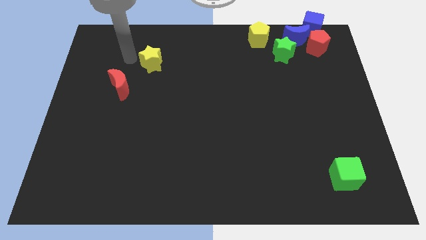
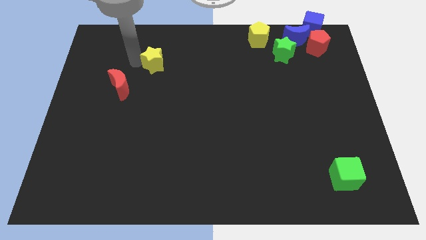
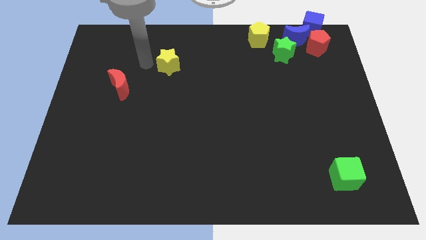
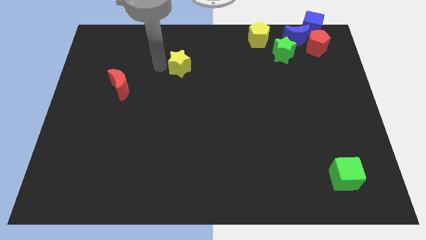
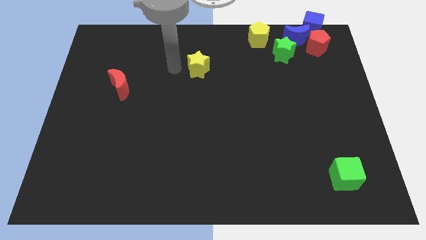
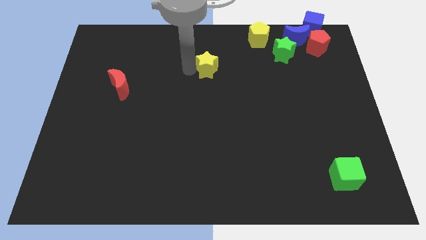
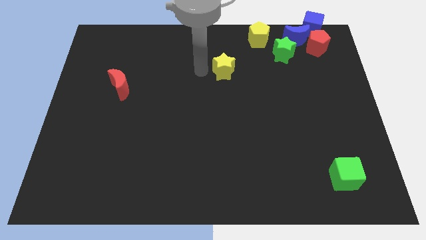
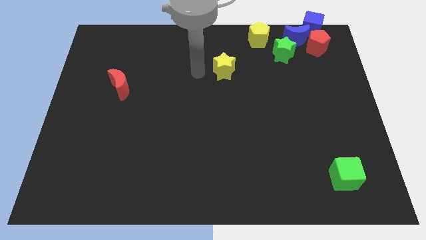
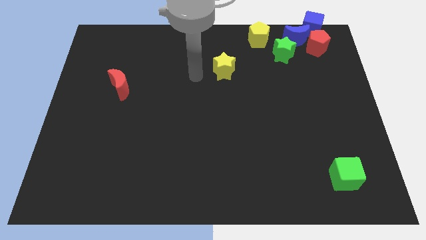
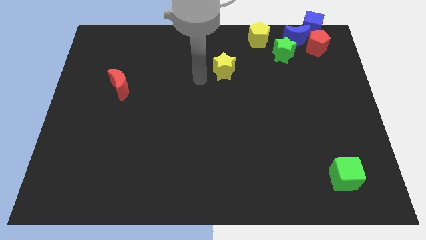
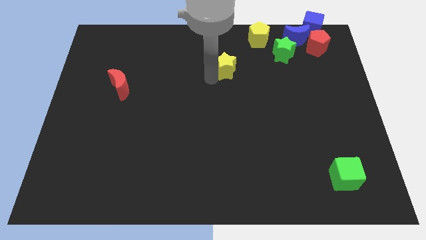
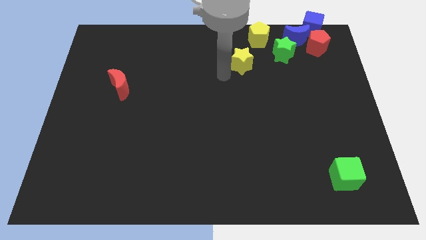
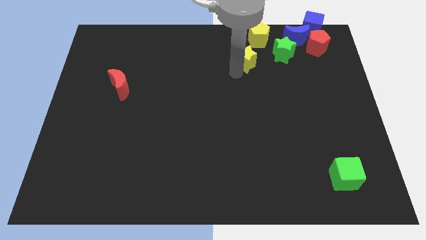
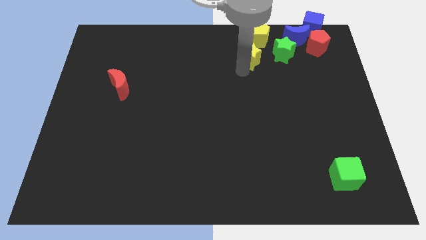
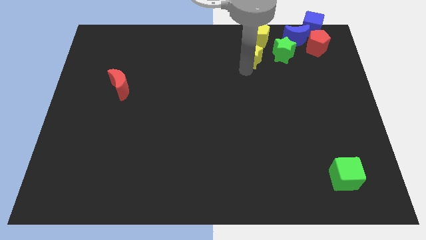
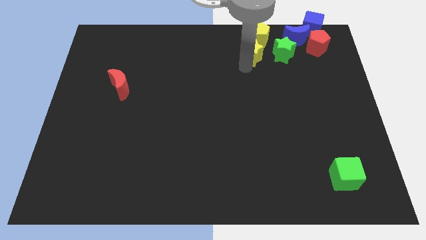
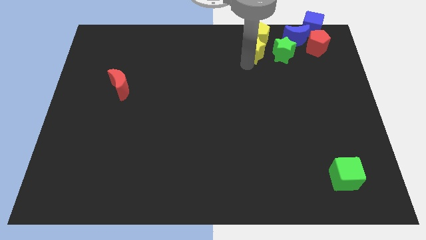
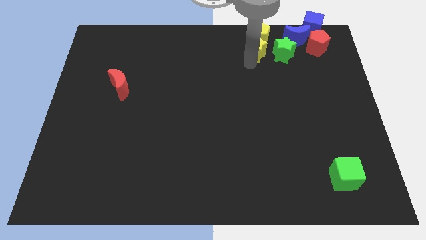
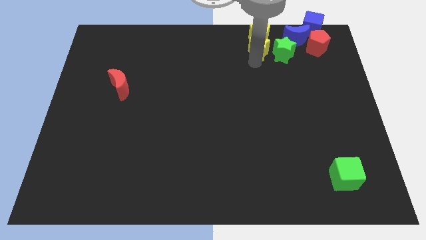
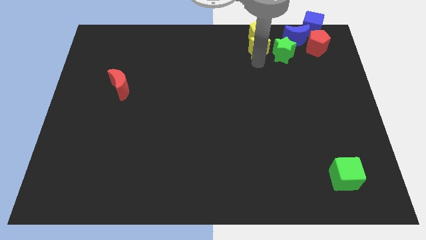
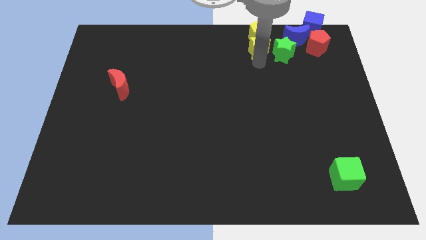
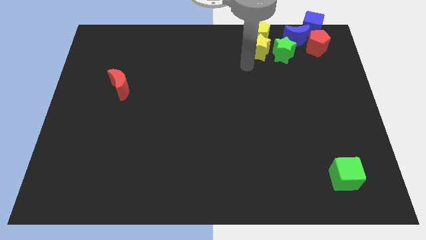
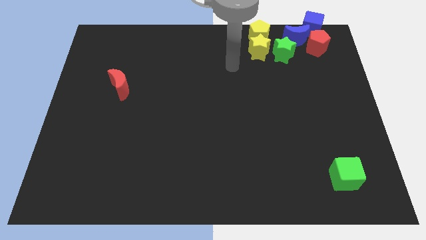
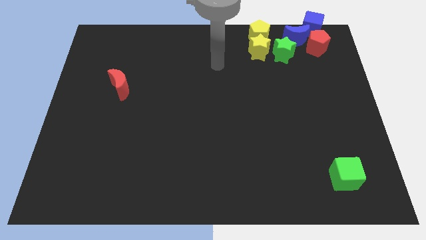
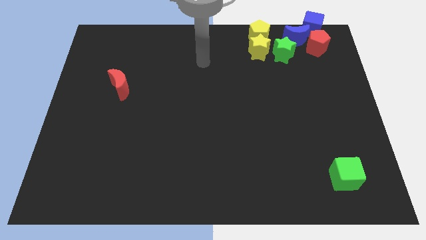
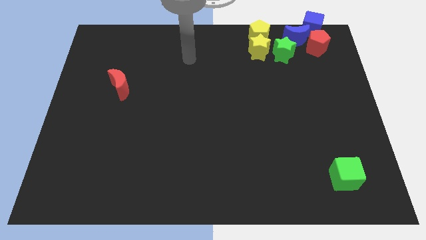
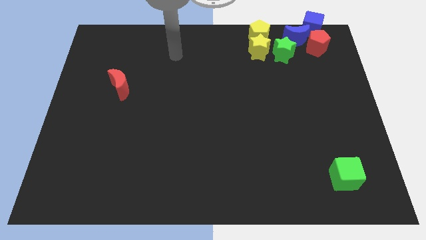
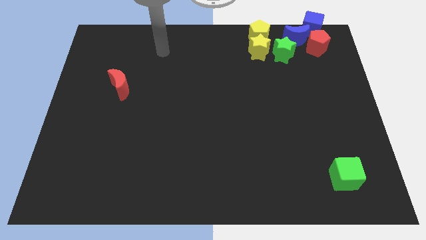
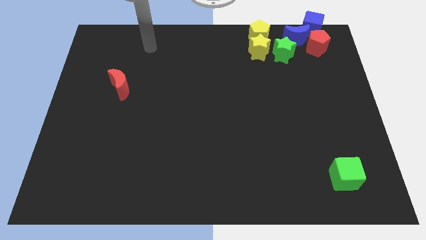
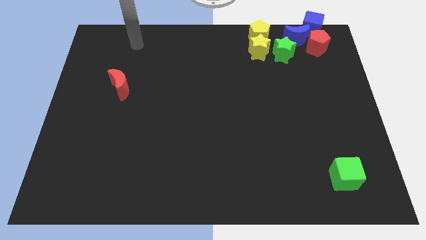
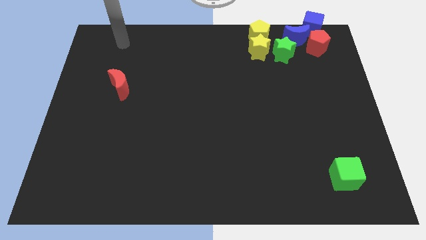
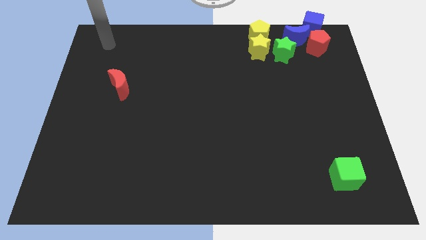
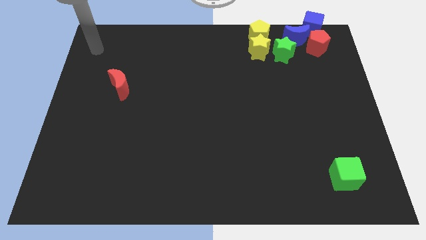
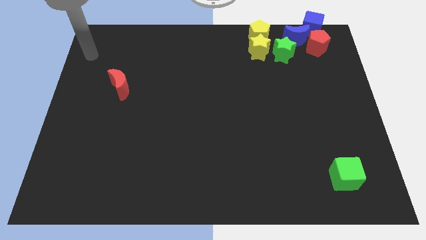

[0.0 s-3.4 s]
move yellow star near yellow pentagon

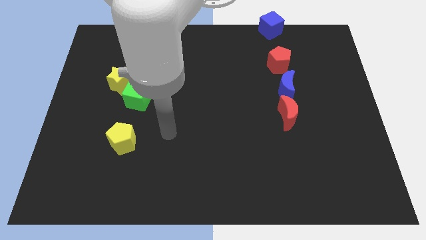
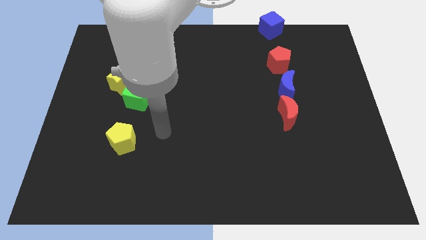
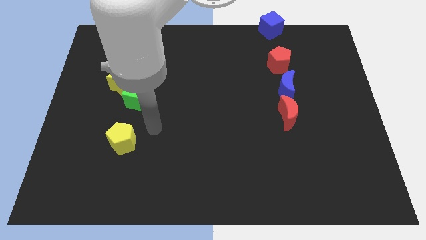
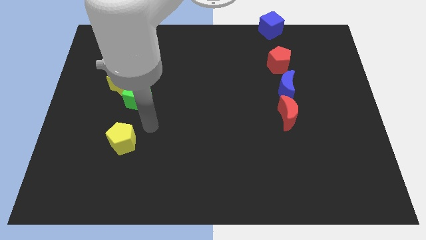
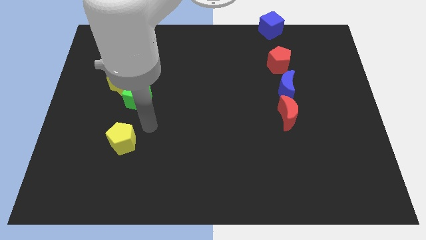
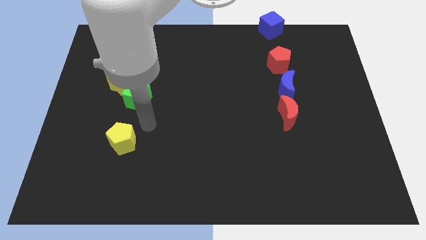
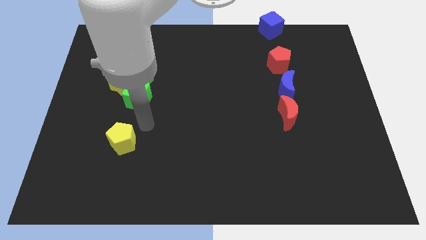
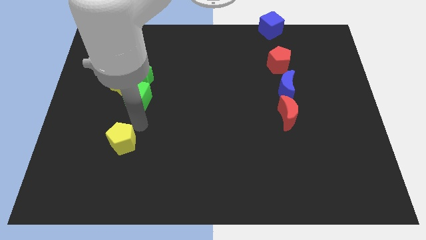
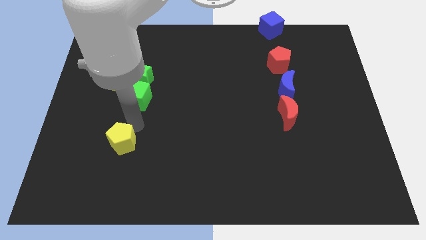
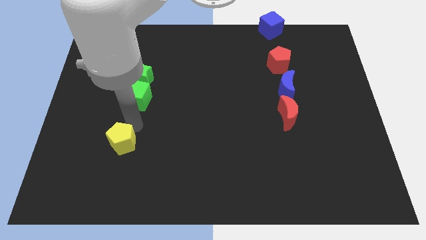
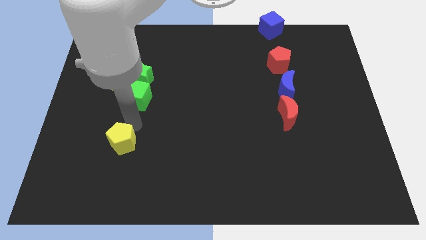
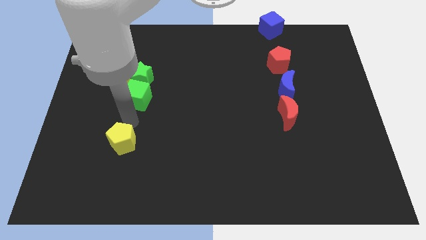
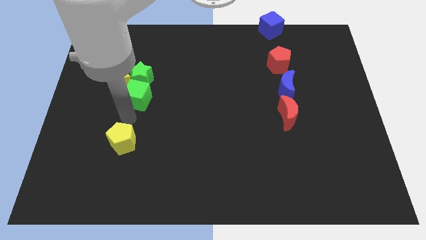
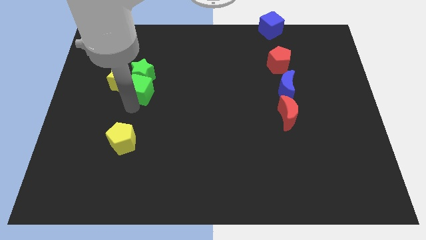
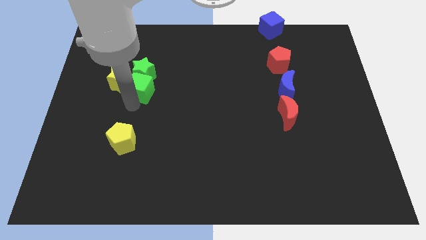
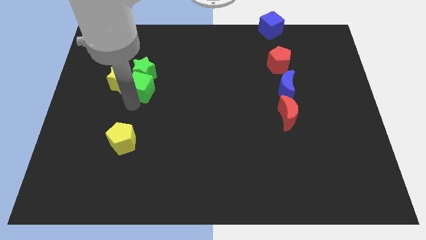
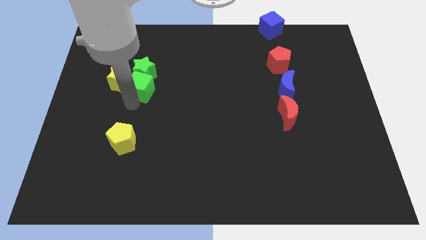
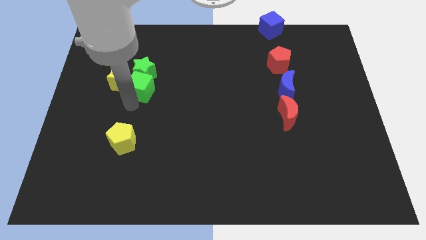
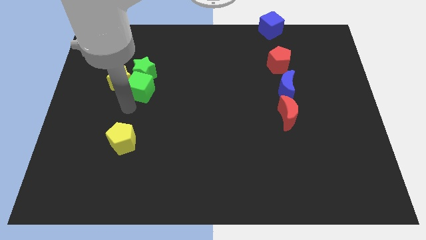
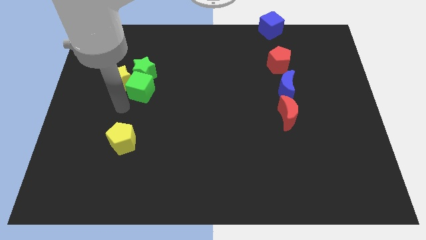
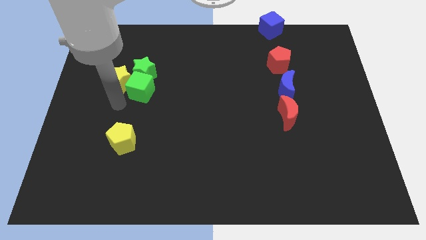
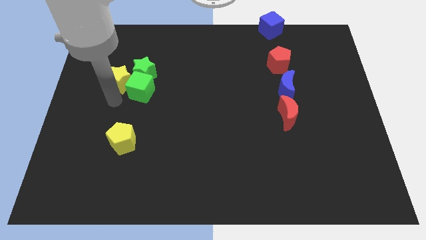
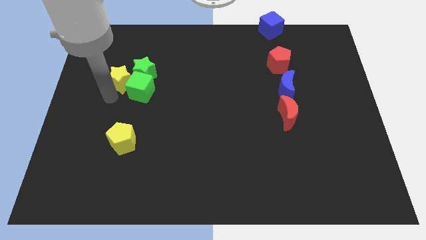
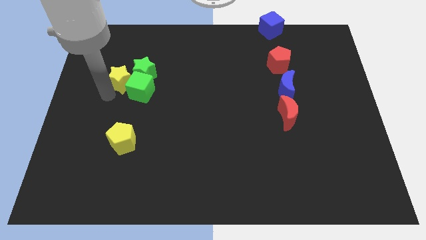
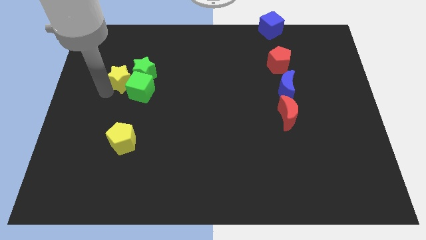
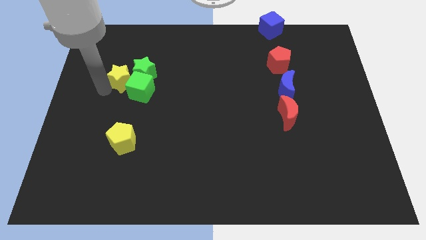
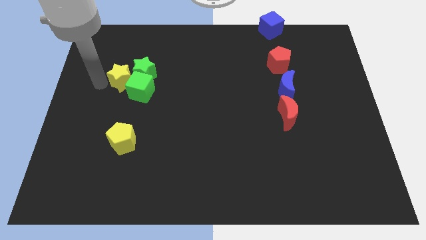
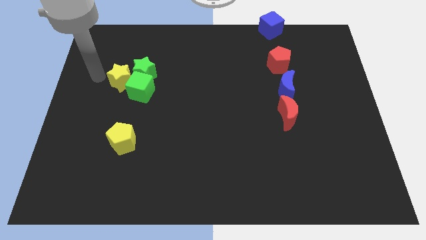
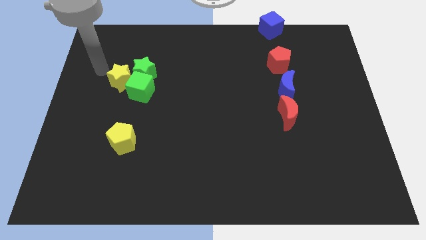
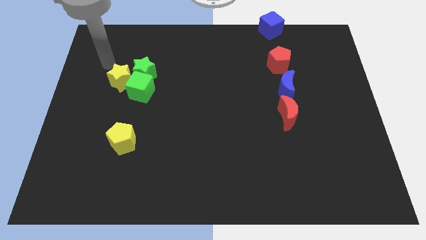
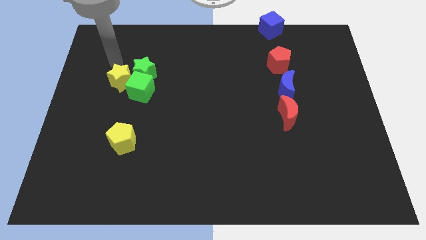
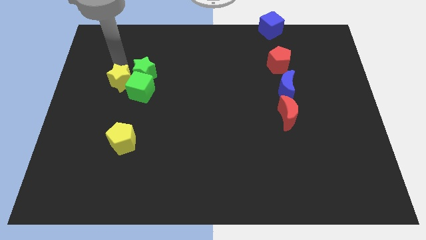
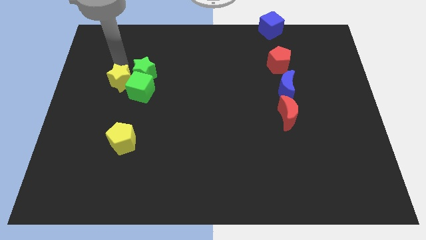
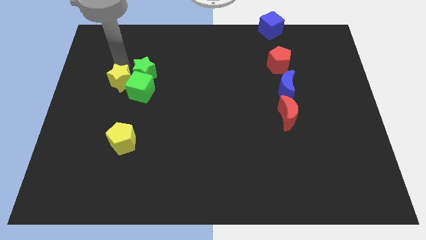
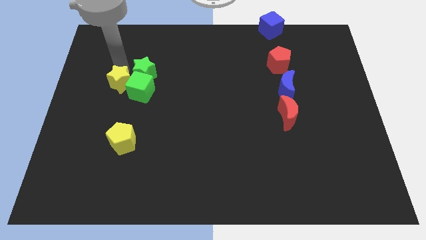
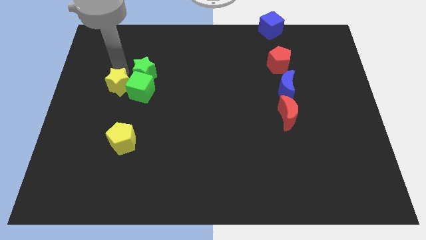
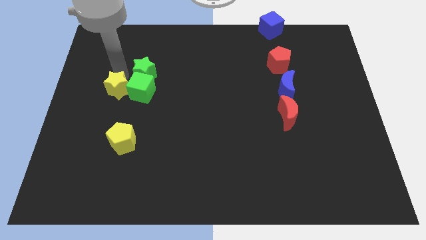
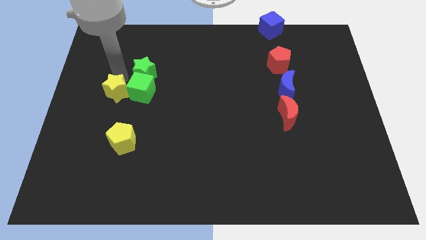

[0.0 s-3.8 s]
move green cubes and yellow star in to each other

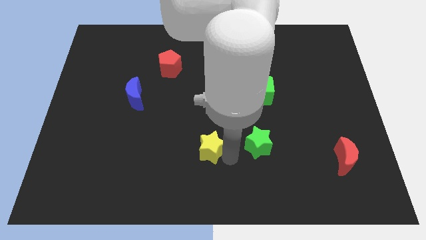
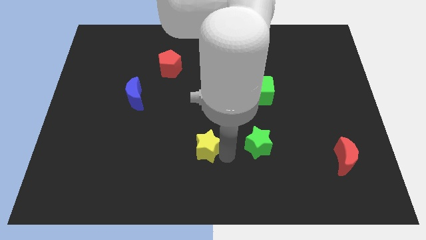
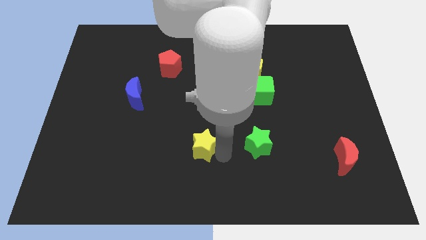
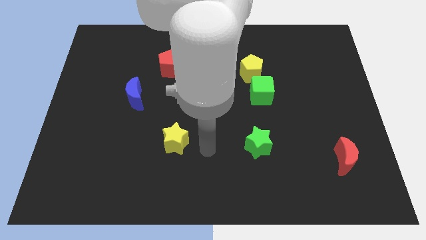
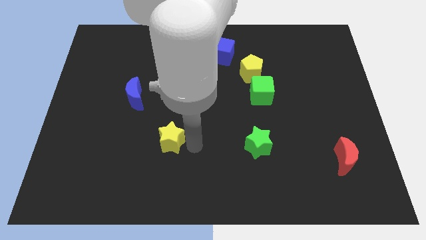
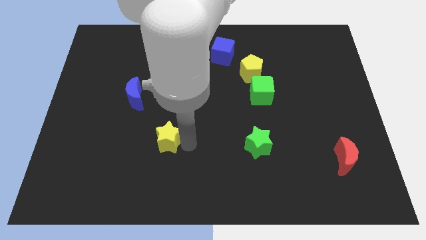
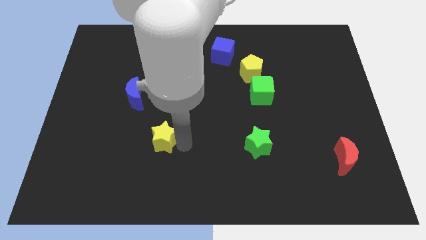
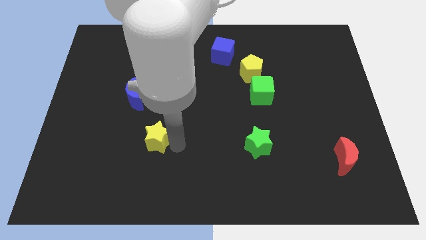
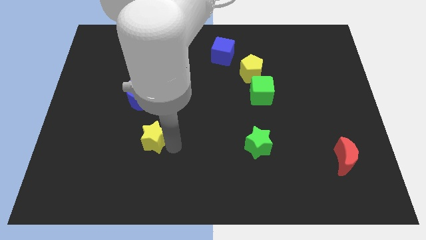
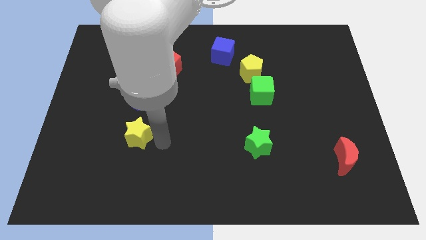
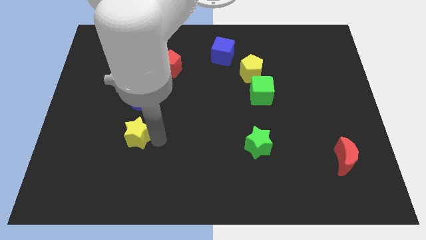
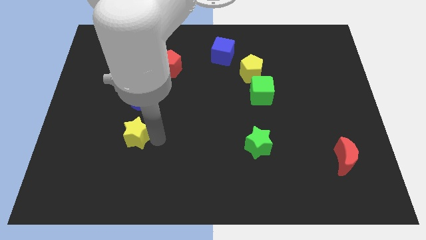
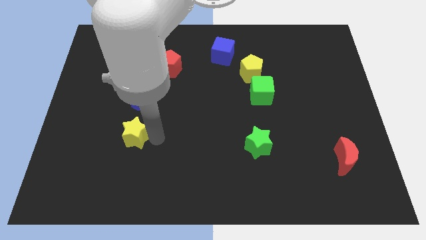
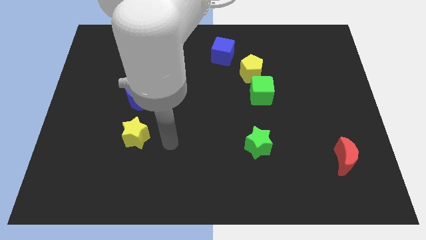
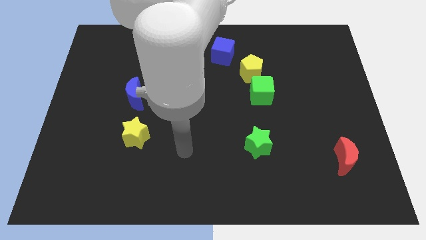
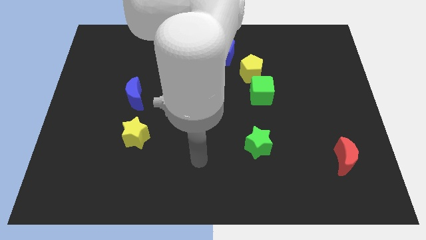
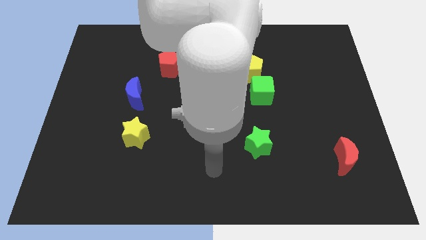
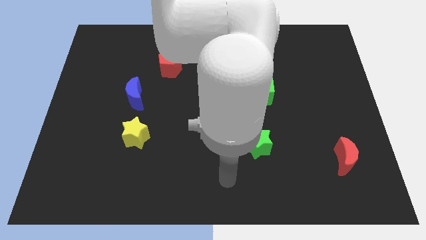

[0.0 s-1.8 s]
move the yellow star below the blue moon
